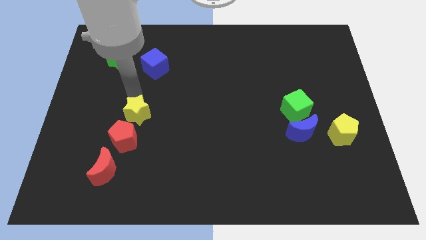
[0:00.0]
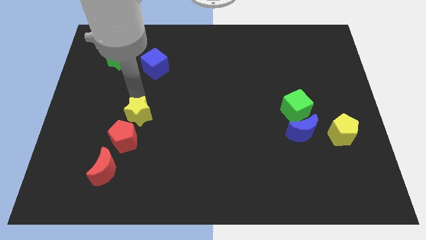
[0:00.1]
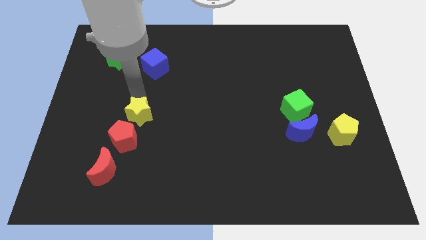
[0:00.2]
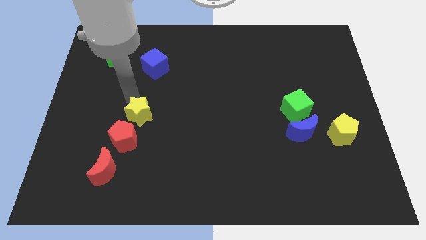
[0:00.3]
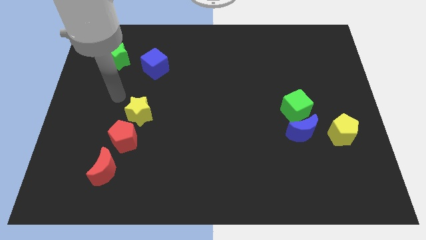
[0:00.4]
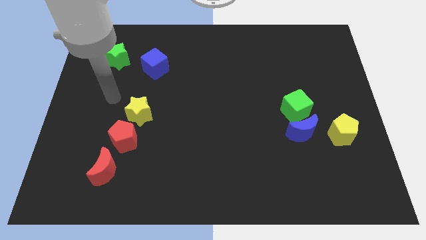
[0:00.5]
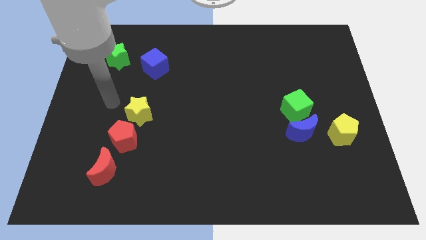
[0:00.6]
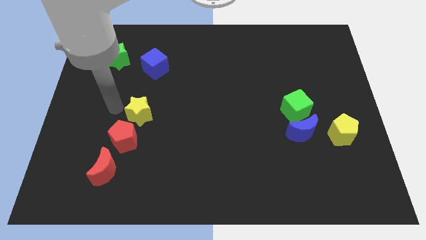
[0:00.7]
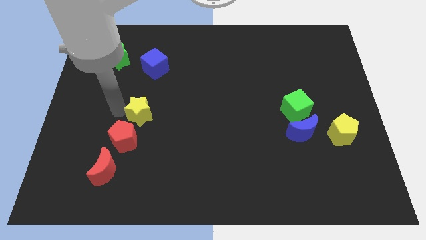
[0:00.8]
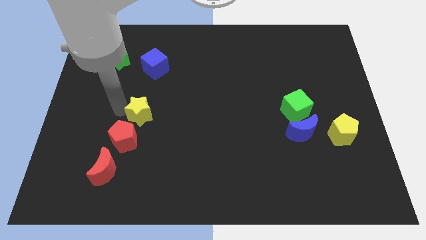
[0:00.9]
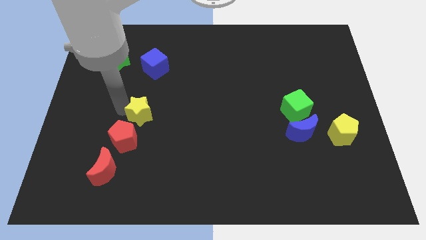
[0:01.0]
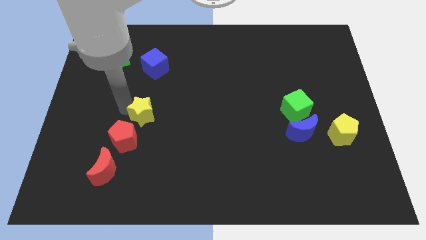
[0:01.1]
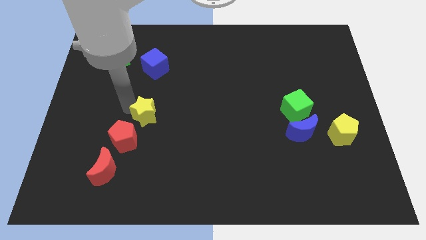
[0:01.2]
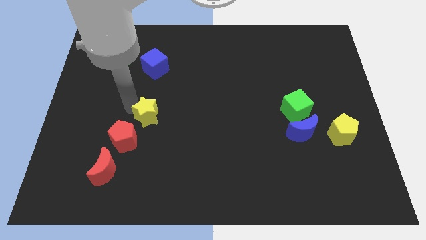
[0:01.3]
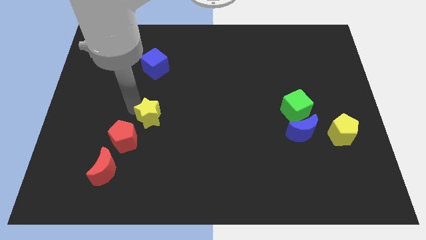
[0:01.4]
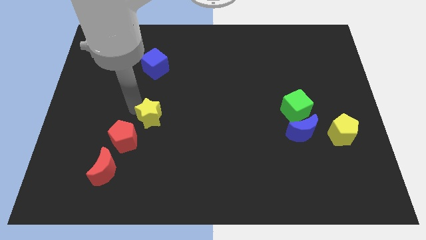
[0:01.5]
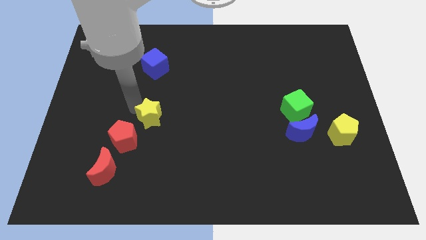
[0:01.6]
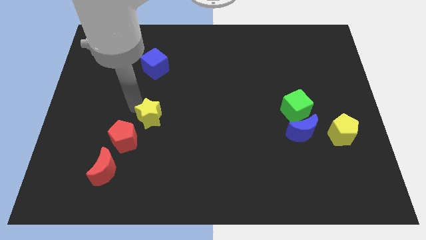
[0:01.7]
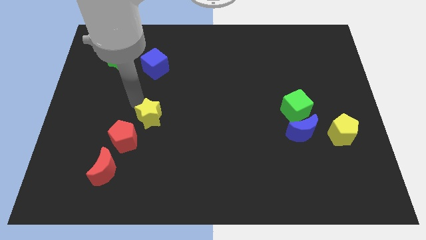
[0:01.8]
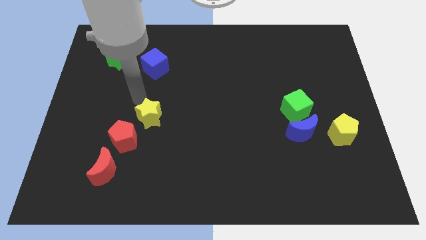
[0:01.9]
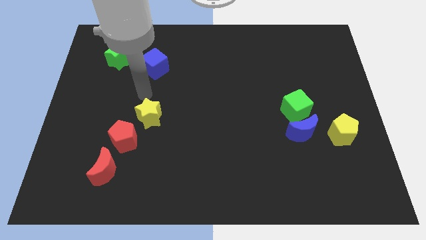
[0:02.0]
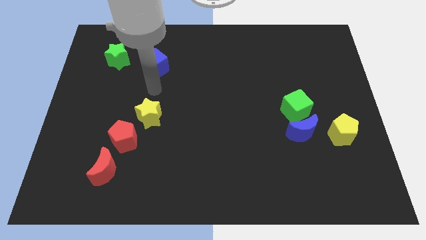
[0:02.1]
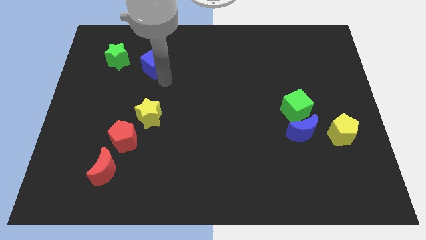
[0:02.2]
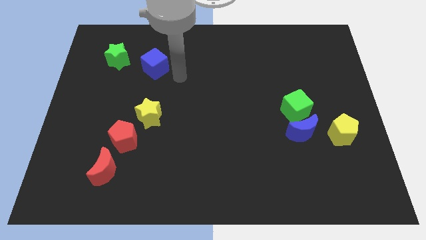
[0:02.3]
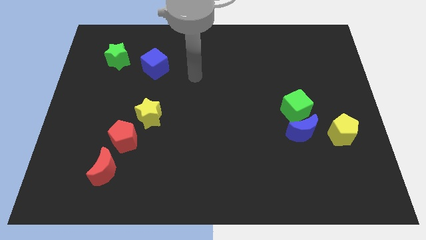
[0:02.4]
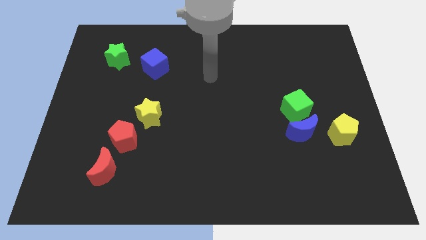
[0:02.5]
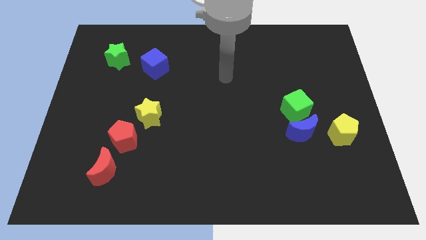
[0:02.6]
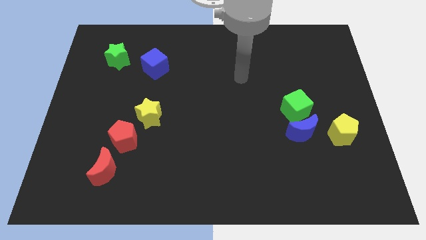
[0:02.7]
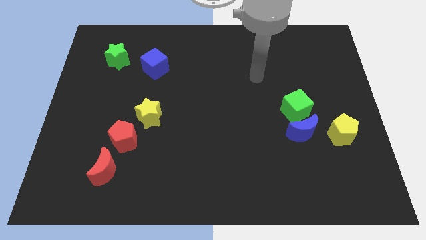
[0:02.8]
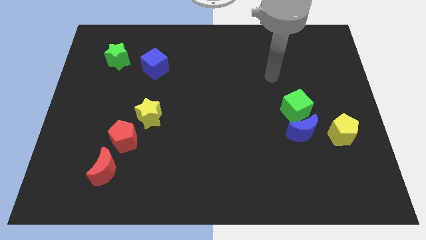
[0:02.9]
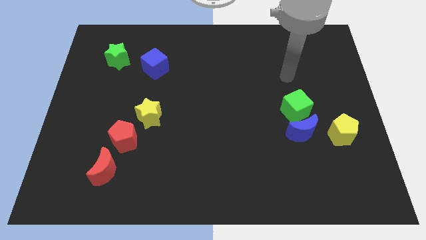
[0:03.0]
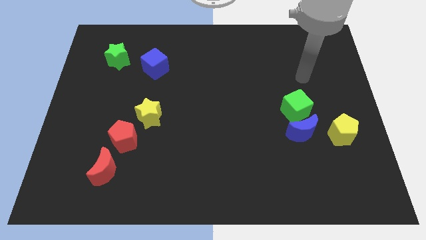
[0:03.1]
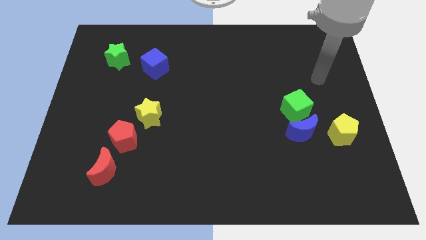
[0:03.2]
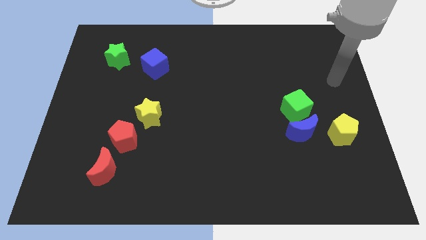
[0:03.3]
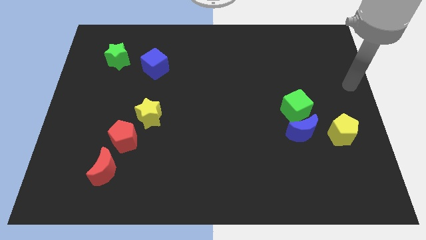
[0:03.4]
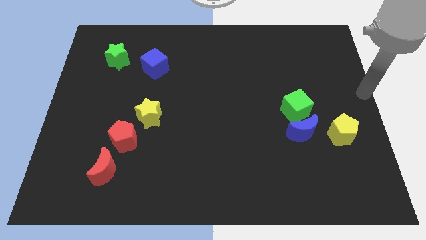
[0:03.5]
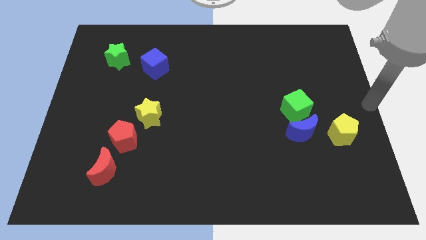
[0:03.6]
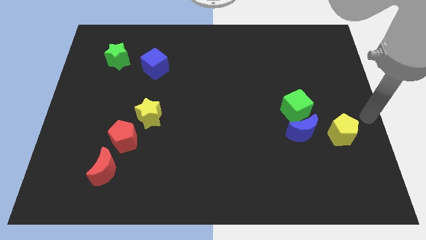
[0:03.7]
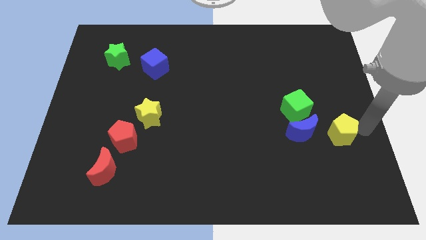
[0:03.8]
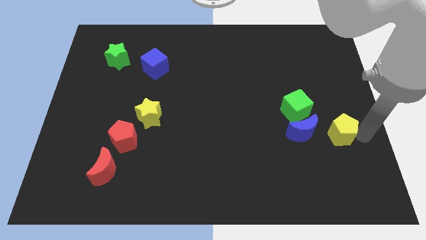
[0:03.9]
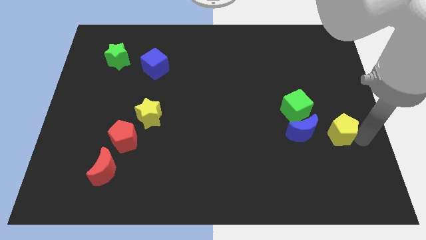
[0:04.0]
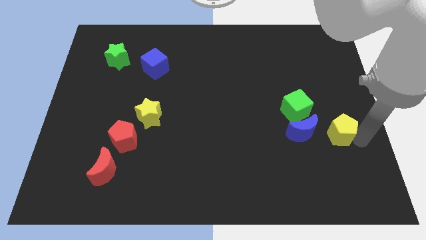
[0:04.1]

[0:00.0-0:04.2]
move the arm away from the yellow star

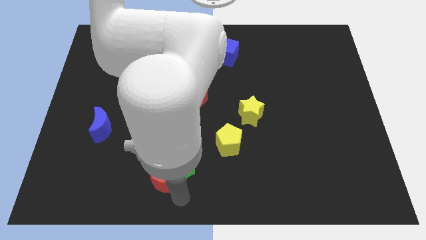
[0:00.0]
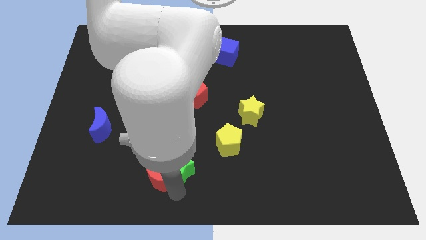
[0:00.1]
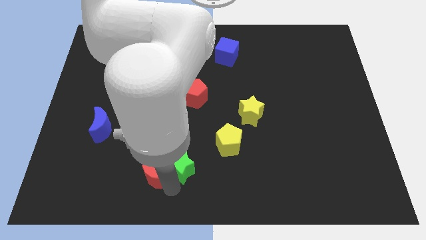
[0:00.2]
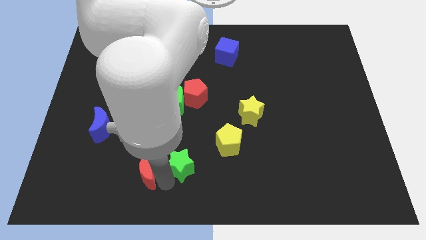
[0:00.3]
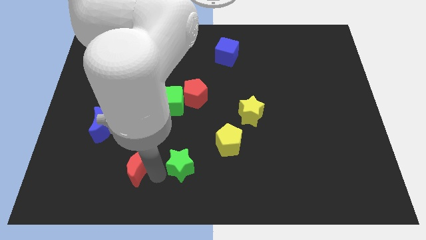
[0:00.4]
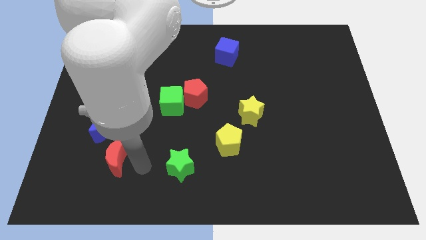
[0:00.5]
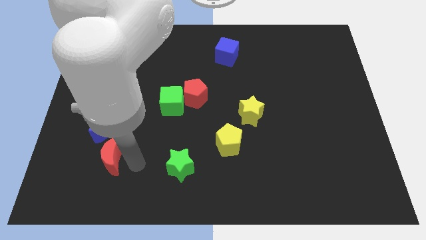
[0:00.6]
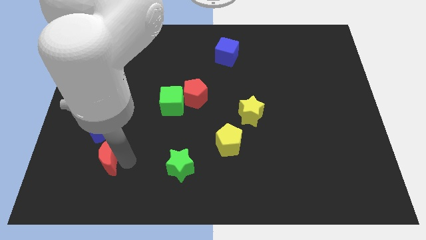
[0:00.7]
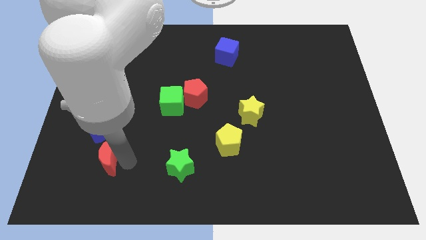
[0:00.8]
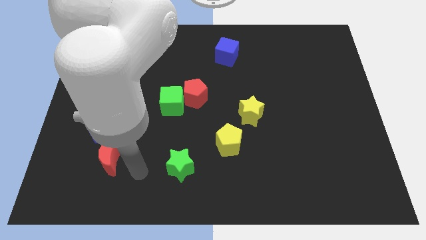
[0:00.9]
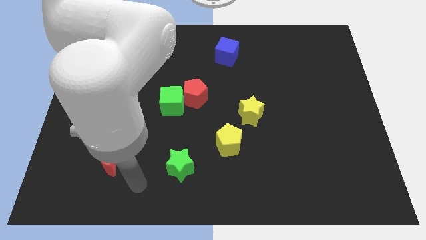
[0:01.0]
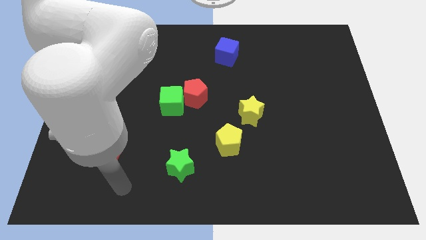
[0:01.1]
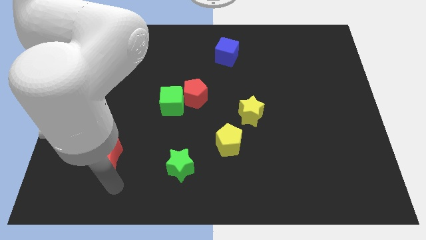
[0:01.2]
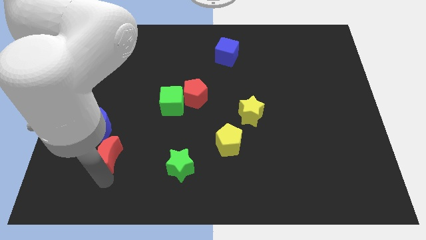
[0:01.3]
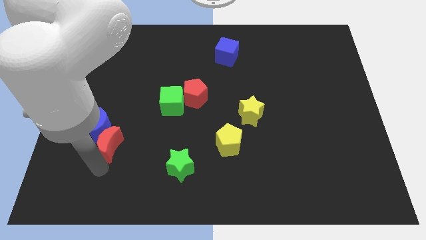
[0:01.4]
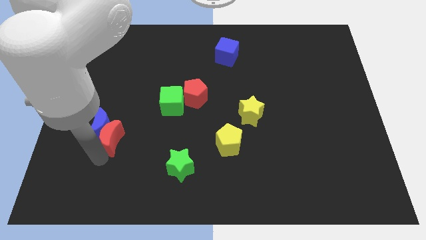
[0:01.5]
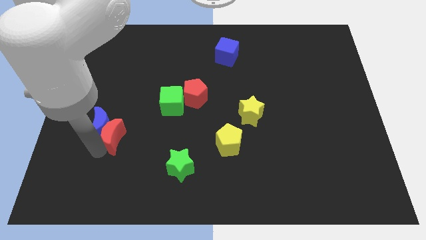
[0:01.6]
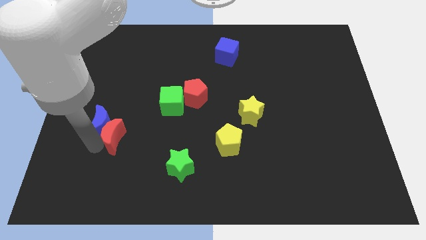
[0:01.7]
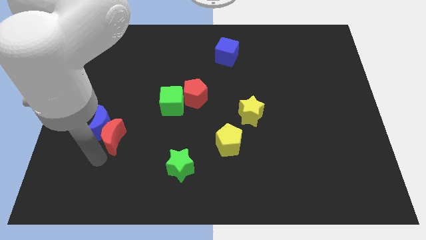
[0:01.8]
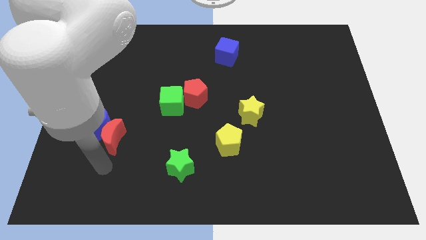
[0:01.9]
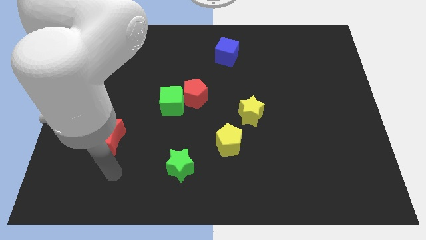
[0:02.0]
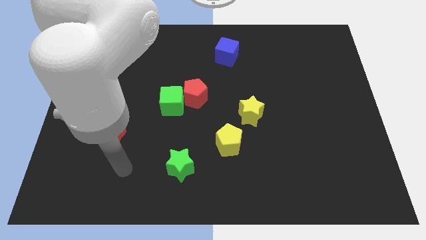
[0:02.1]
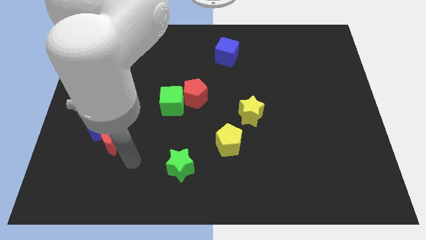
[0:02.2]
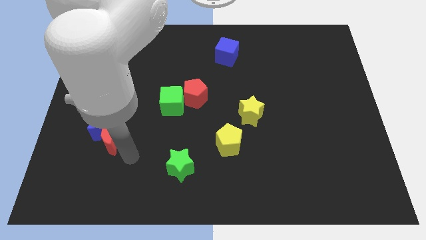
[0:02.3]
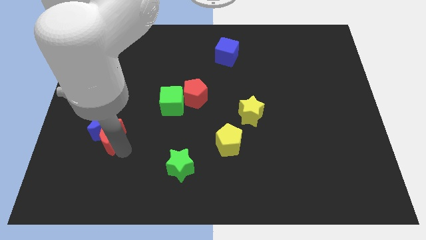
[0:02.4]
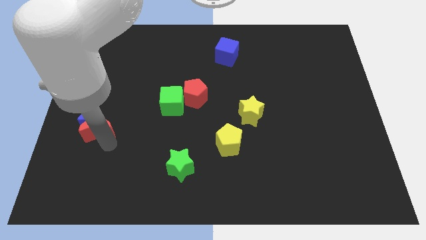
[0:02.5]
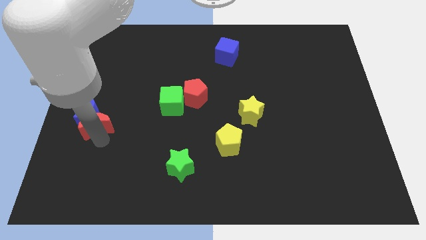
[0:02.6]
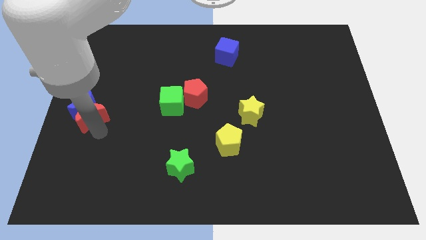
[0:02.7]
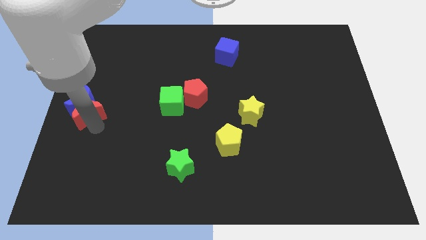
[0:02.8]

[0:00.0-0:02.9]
push the red crescent into the blue moon

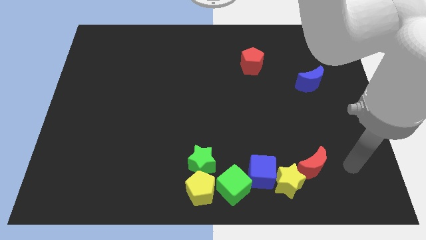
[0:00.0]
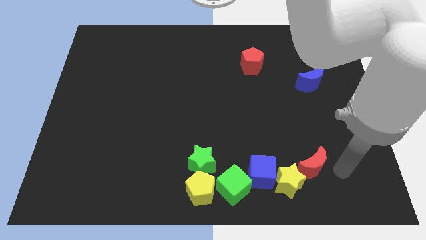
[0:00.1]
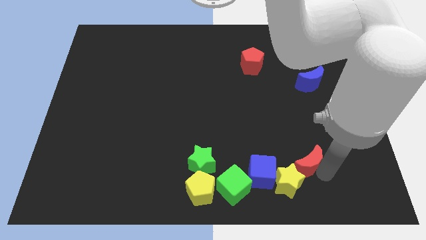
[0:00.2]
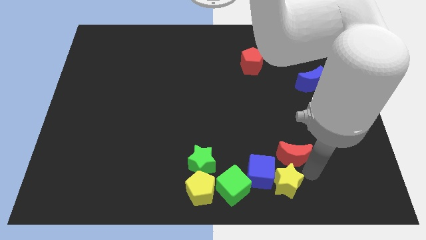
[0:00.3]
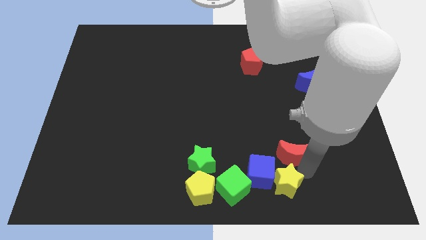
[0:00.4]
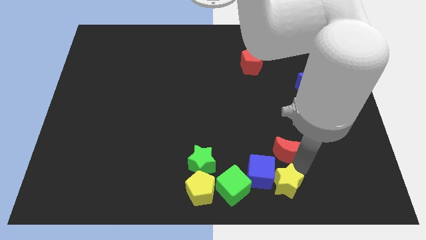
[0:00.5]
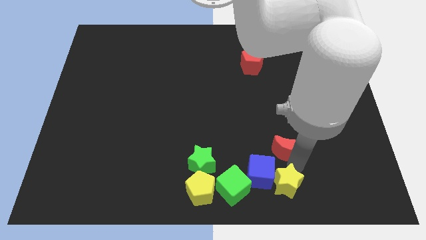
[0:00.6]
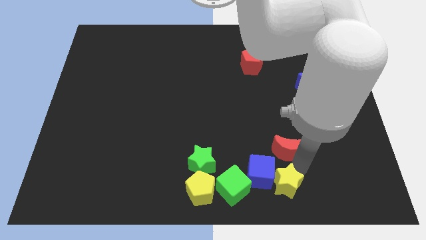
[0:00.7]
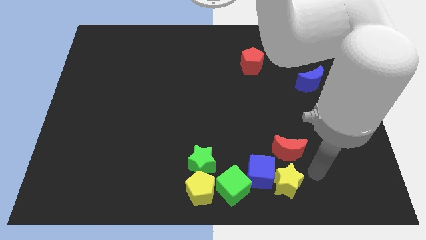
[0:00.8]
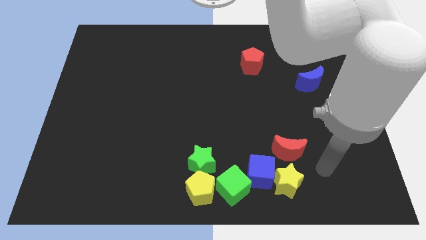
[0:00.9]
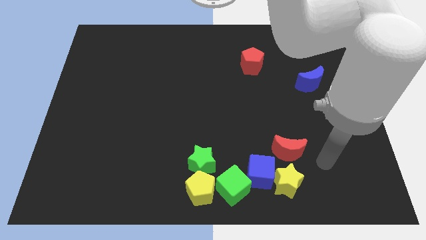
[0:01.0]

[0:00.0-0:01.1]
push the red crescent on top of the yellow star

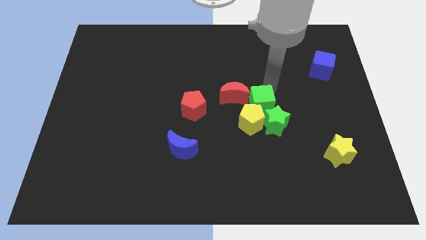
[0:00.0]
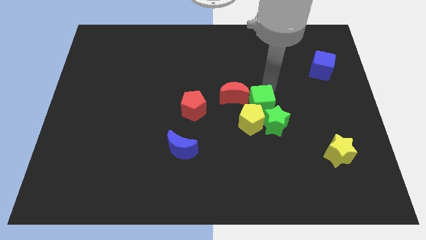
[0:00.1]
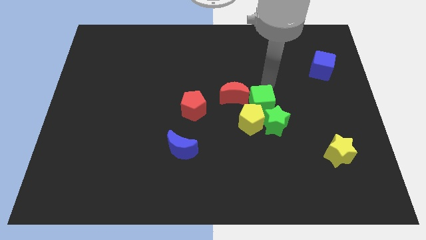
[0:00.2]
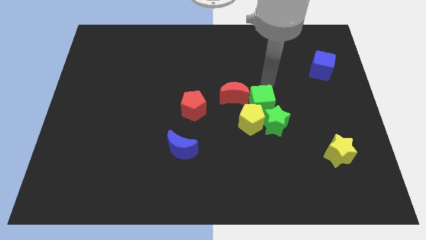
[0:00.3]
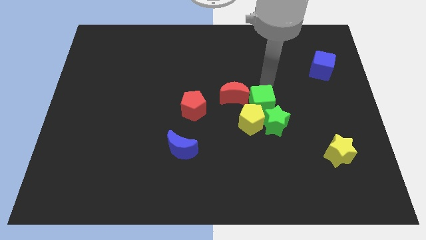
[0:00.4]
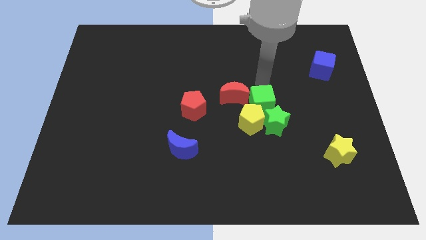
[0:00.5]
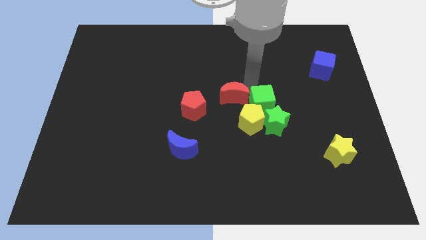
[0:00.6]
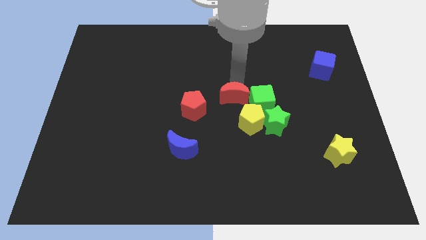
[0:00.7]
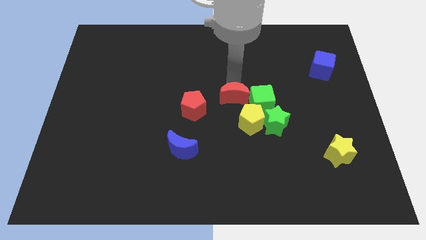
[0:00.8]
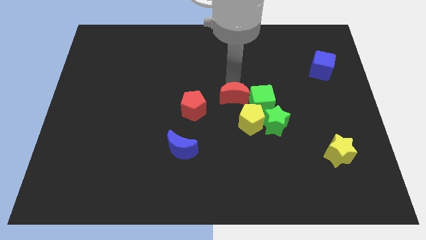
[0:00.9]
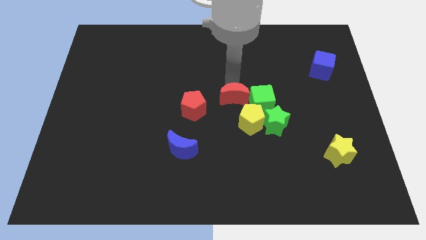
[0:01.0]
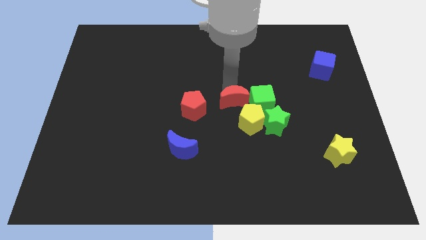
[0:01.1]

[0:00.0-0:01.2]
place your arm above the red moon
